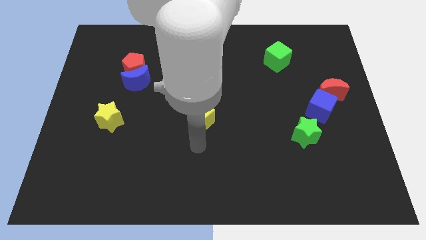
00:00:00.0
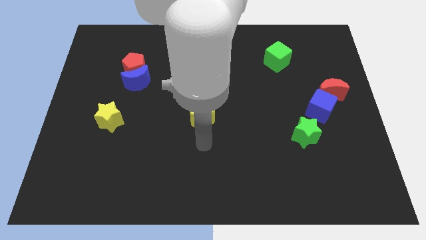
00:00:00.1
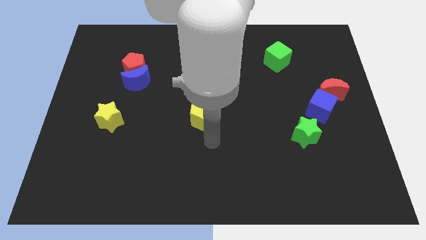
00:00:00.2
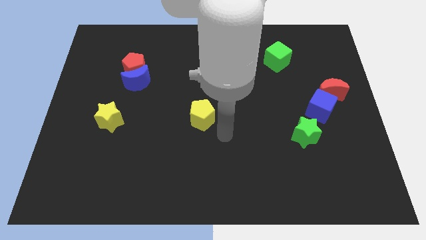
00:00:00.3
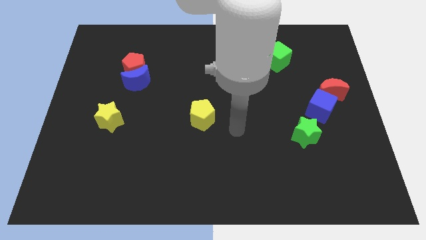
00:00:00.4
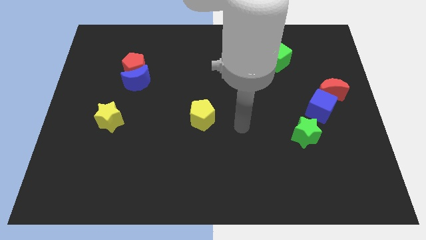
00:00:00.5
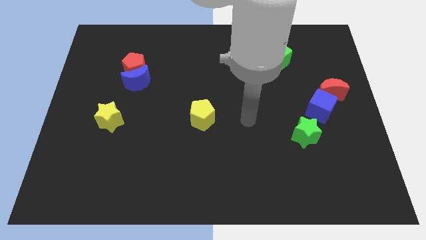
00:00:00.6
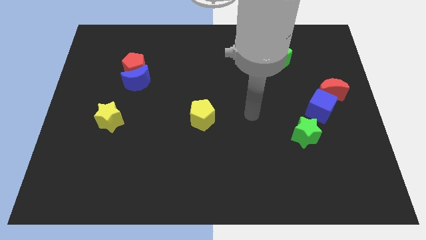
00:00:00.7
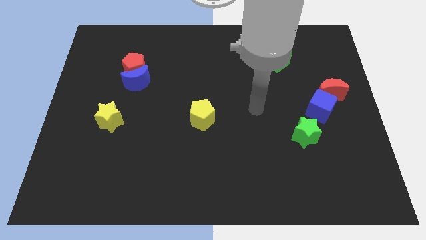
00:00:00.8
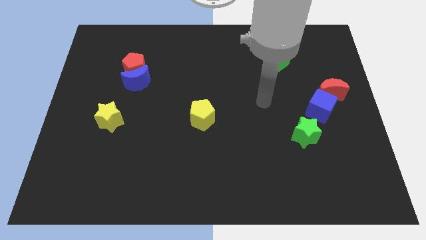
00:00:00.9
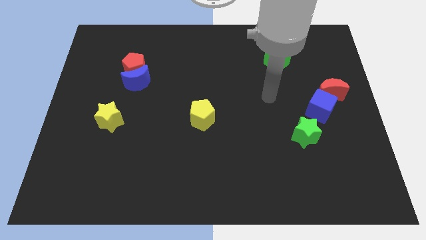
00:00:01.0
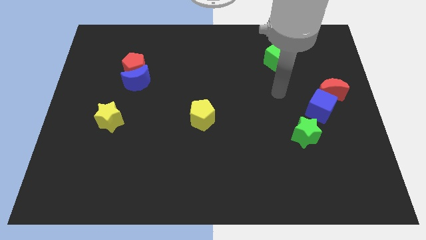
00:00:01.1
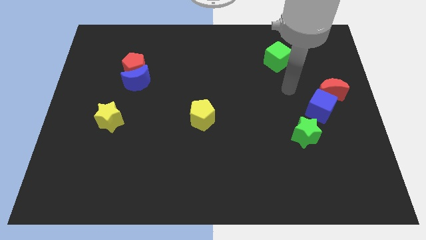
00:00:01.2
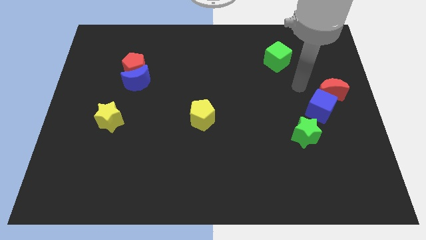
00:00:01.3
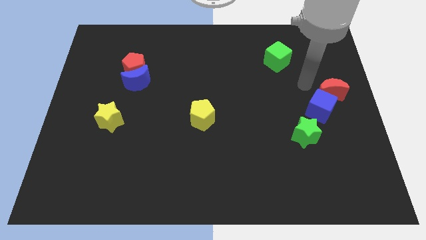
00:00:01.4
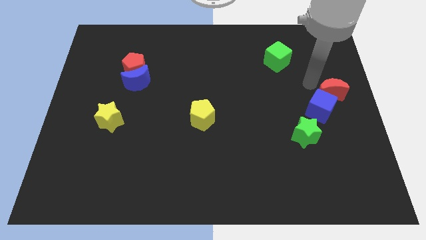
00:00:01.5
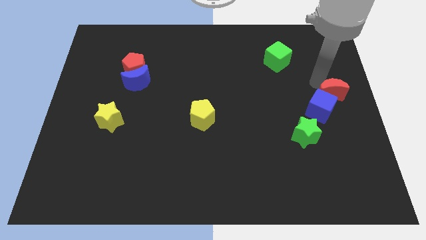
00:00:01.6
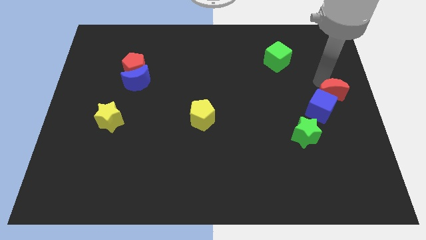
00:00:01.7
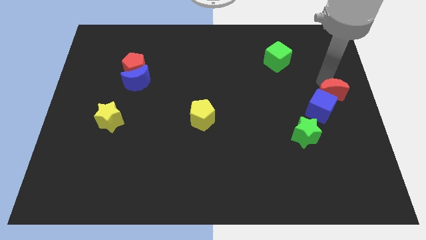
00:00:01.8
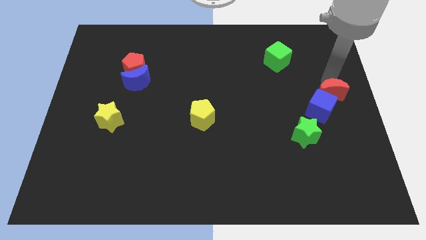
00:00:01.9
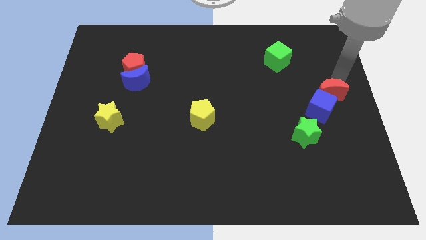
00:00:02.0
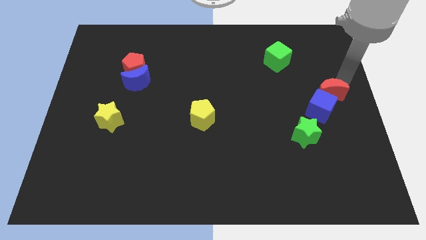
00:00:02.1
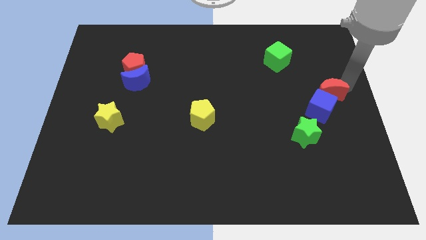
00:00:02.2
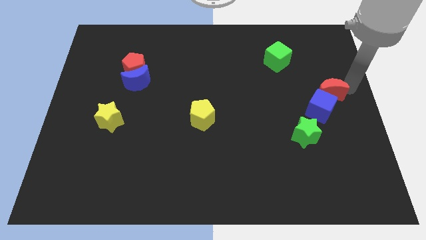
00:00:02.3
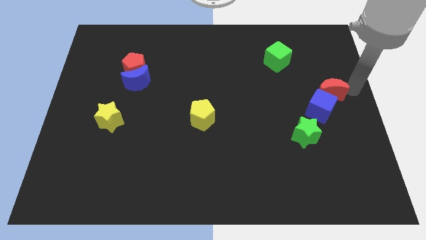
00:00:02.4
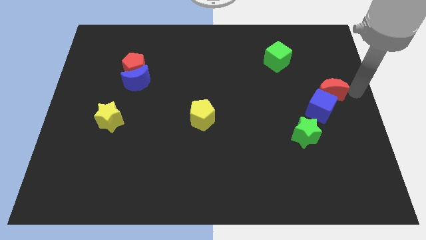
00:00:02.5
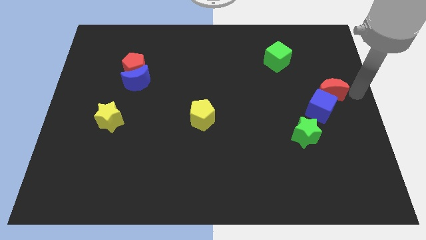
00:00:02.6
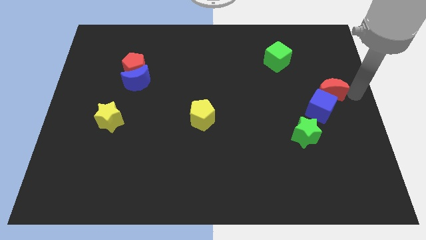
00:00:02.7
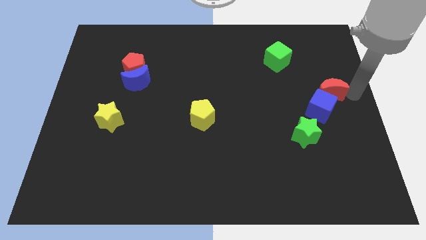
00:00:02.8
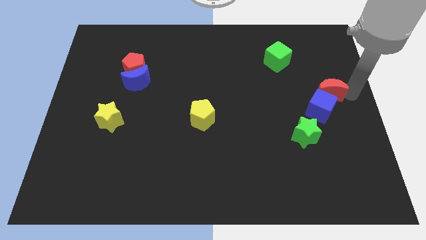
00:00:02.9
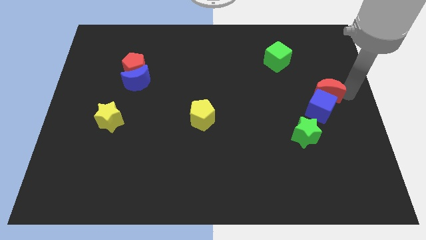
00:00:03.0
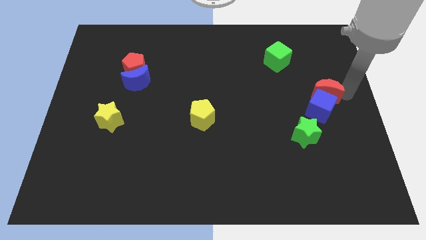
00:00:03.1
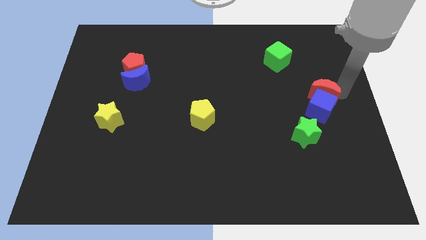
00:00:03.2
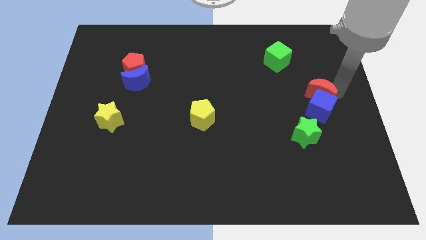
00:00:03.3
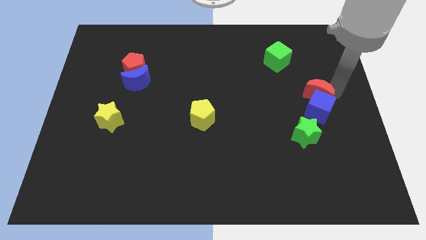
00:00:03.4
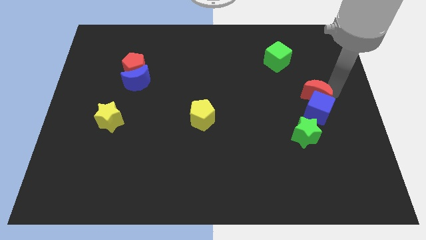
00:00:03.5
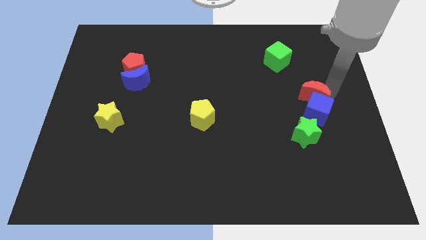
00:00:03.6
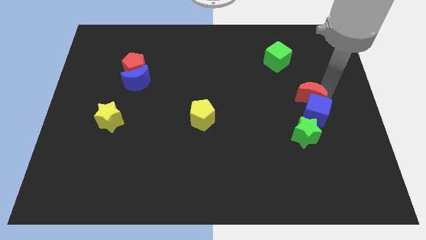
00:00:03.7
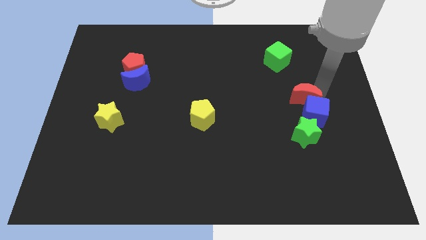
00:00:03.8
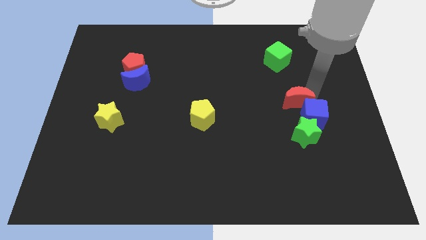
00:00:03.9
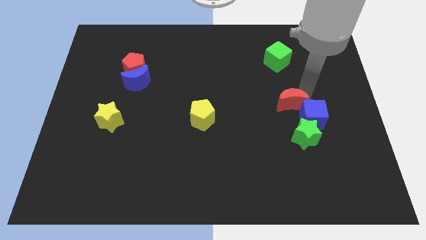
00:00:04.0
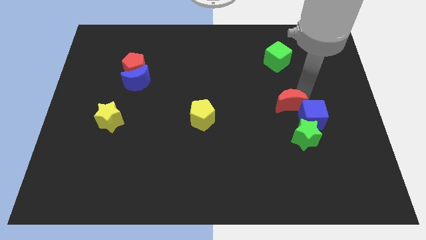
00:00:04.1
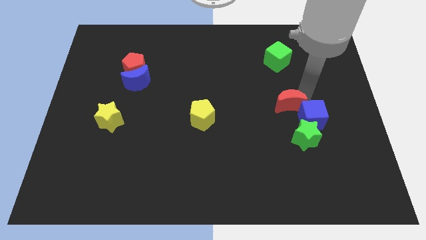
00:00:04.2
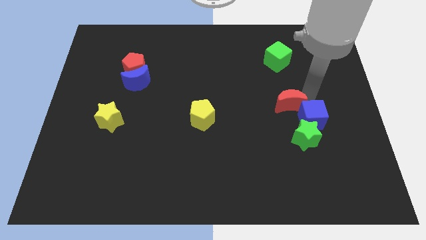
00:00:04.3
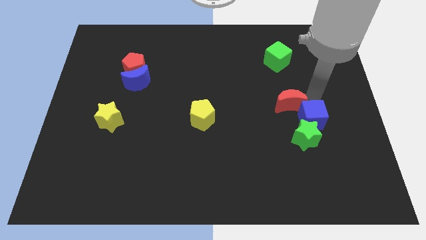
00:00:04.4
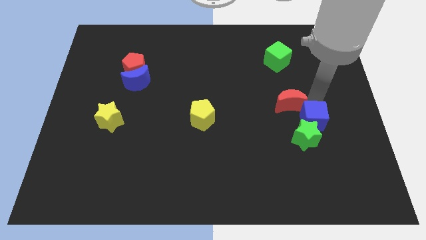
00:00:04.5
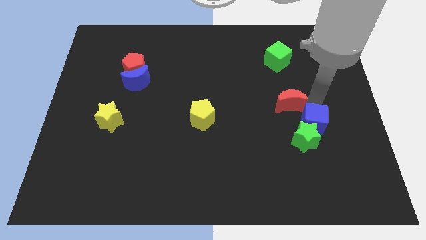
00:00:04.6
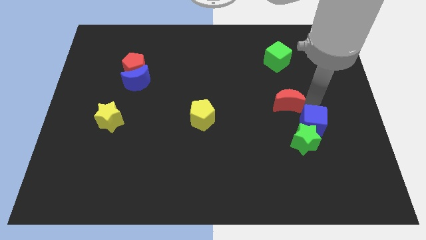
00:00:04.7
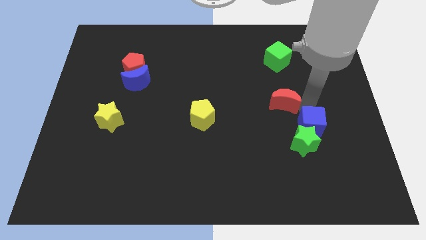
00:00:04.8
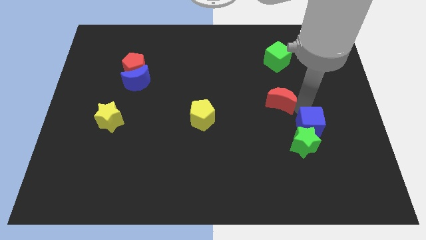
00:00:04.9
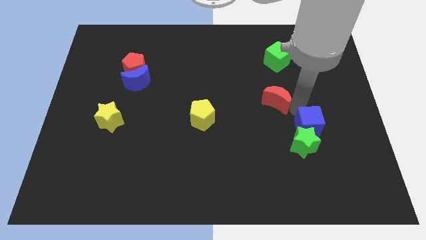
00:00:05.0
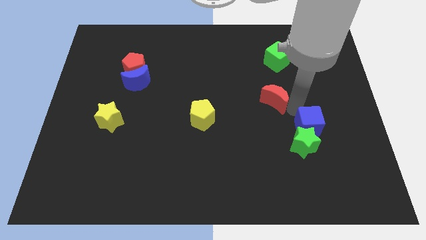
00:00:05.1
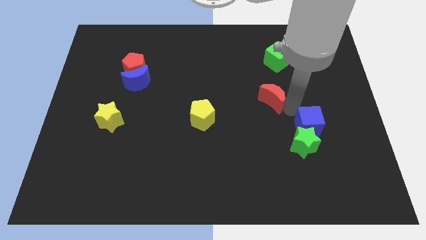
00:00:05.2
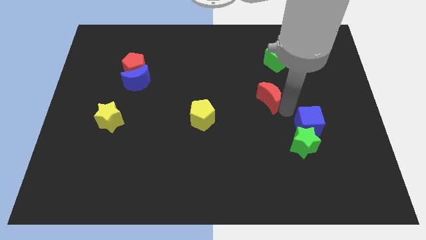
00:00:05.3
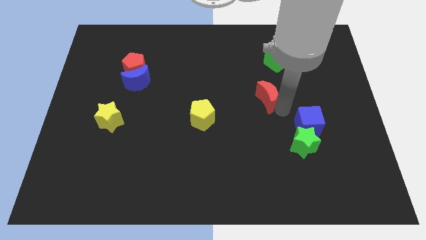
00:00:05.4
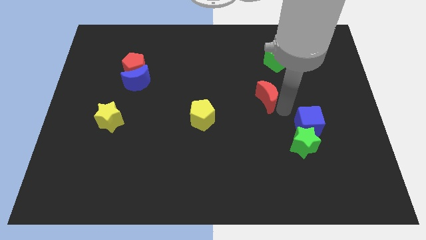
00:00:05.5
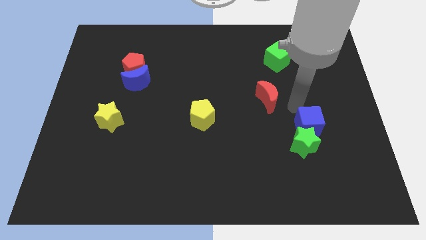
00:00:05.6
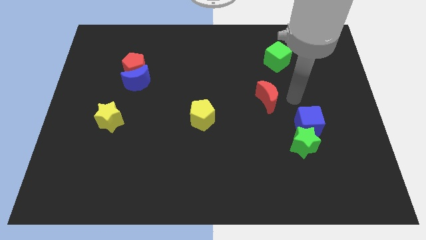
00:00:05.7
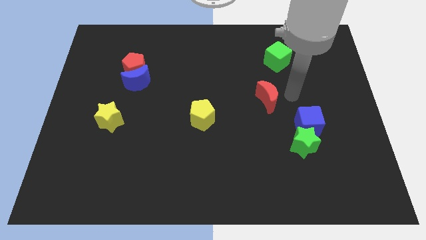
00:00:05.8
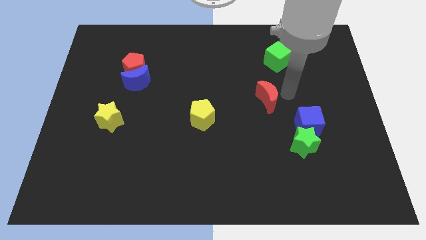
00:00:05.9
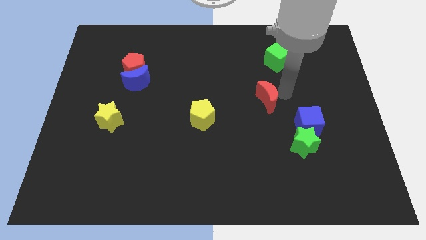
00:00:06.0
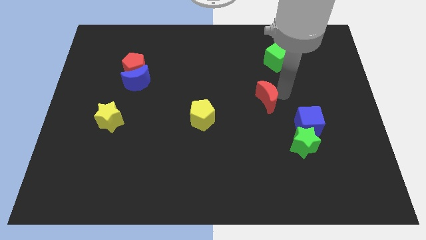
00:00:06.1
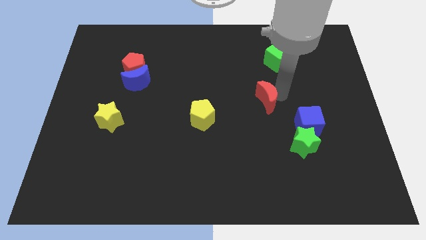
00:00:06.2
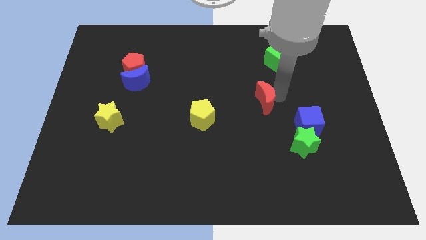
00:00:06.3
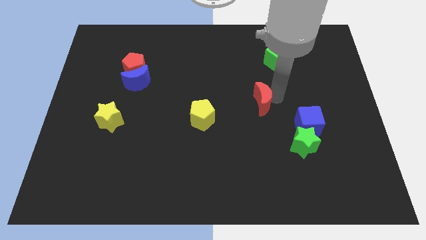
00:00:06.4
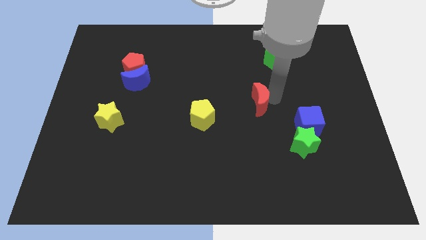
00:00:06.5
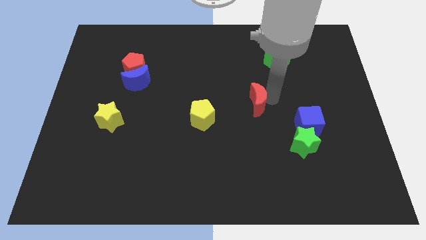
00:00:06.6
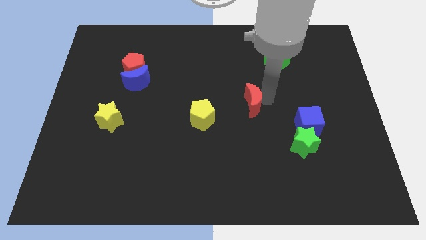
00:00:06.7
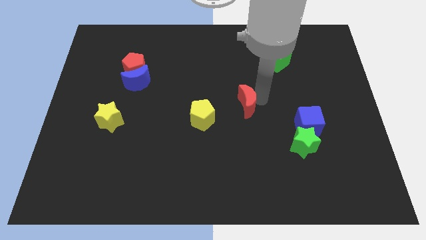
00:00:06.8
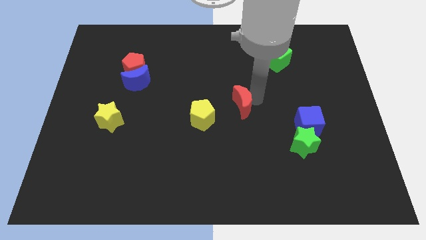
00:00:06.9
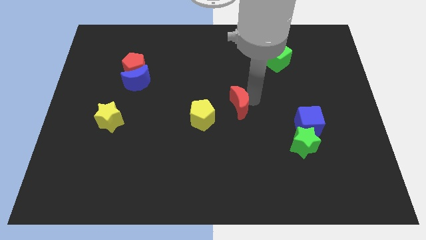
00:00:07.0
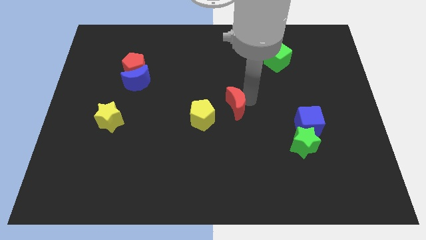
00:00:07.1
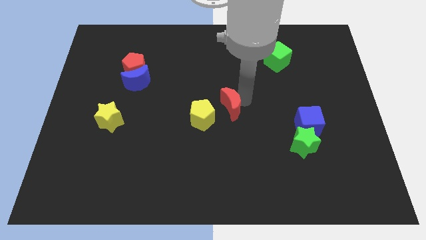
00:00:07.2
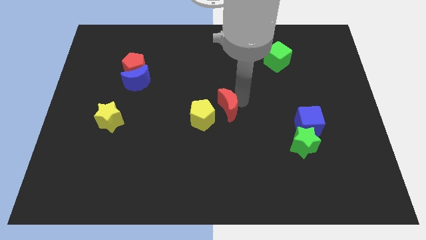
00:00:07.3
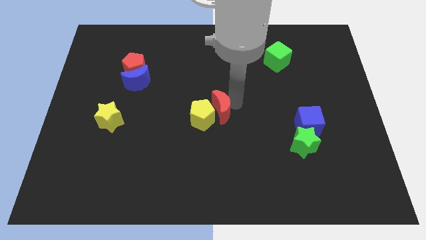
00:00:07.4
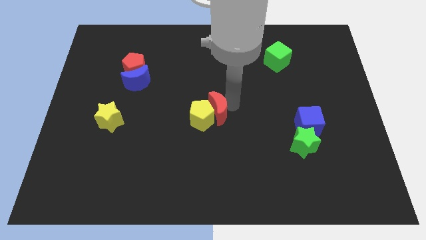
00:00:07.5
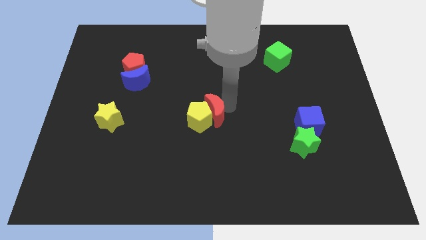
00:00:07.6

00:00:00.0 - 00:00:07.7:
put the red moon next to the yellow pentagon

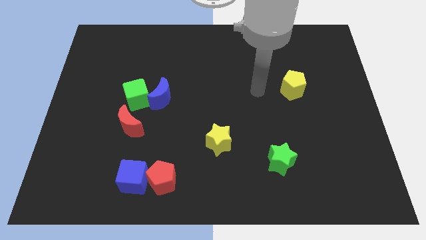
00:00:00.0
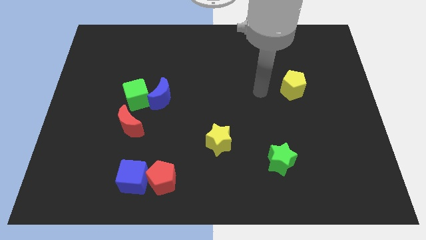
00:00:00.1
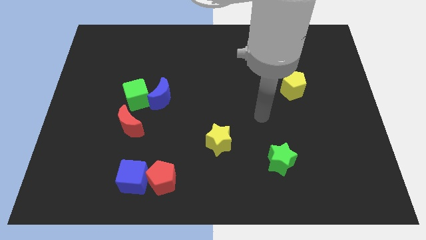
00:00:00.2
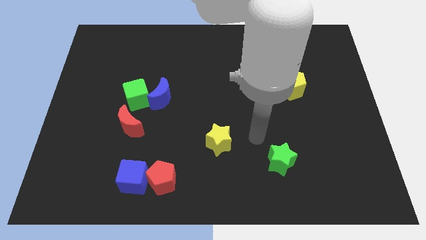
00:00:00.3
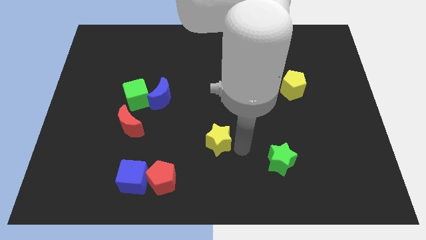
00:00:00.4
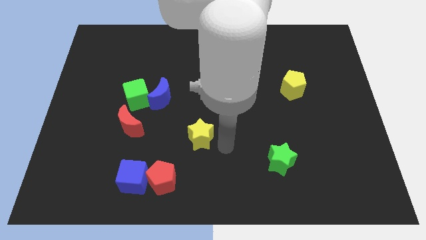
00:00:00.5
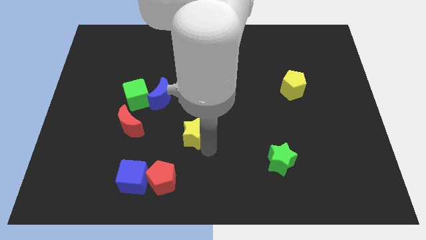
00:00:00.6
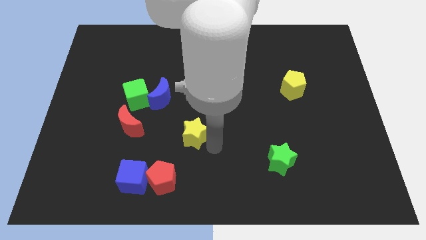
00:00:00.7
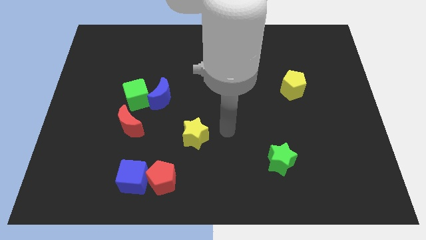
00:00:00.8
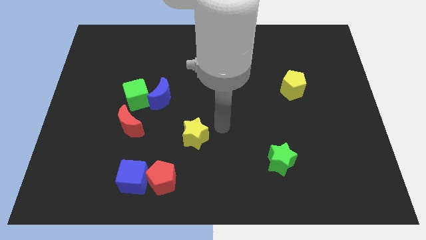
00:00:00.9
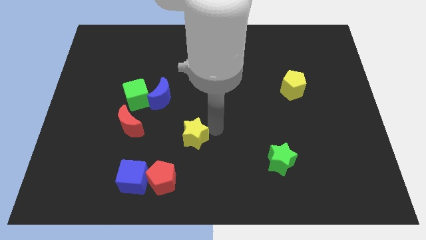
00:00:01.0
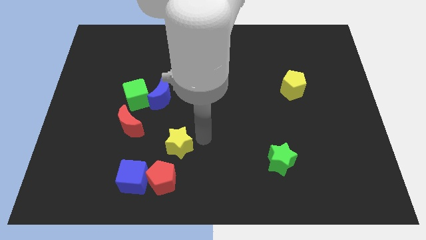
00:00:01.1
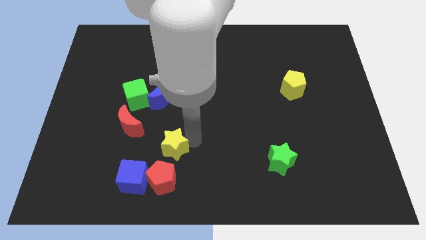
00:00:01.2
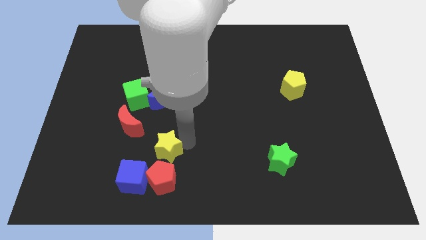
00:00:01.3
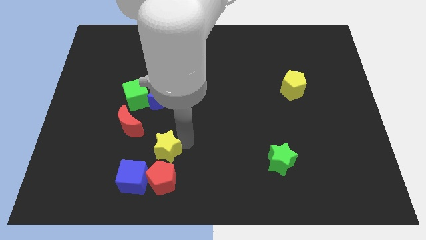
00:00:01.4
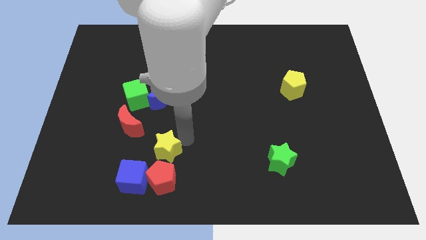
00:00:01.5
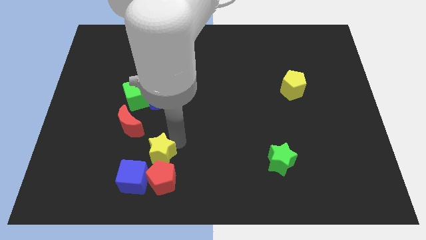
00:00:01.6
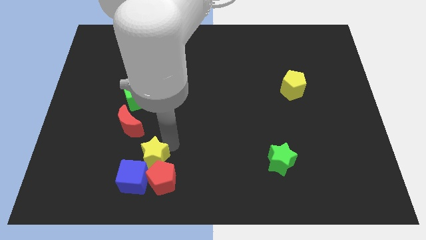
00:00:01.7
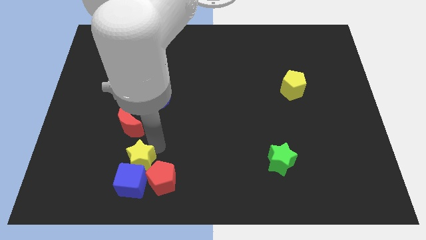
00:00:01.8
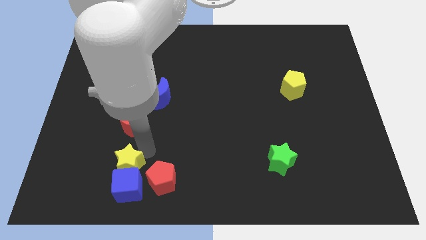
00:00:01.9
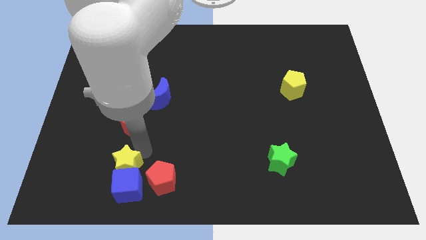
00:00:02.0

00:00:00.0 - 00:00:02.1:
push the yellow star next to the blue cube
